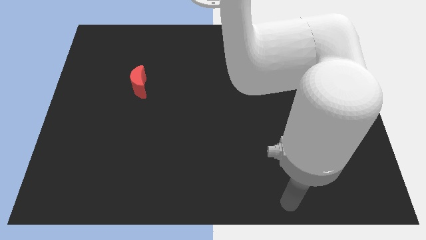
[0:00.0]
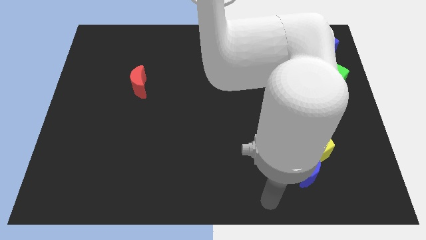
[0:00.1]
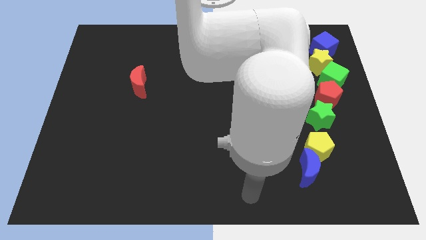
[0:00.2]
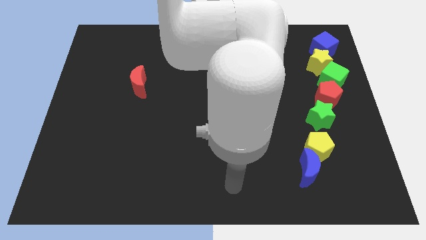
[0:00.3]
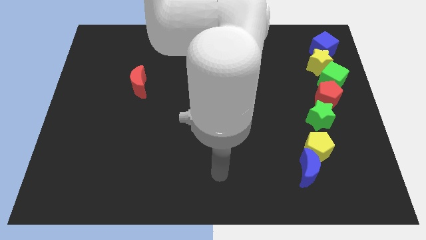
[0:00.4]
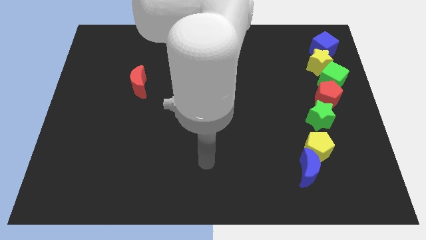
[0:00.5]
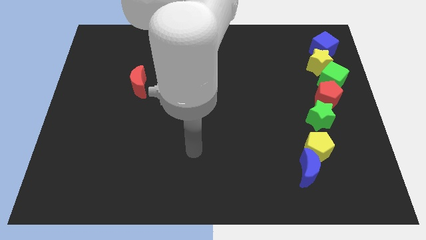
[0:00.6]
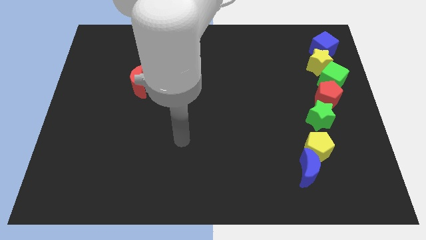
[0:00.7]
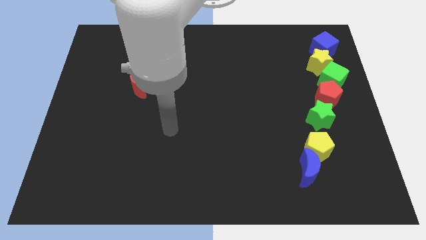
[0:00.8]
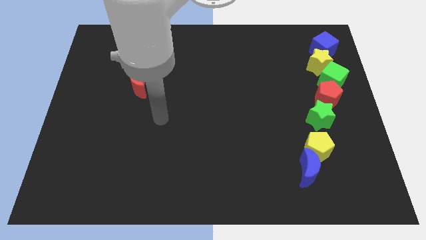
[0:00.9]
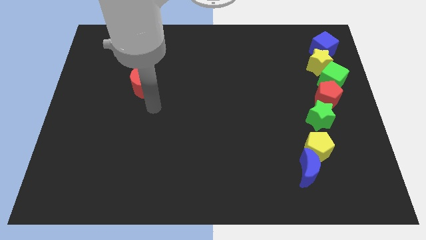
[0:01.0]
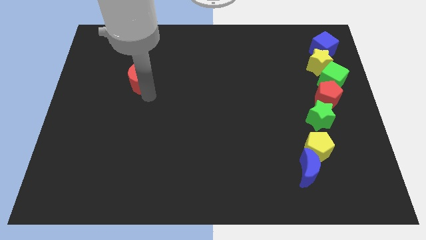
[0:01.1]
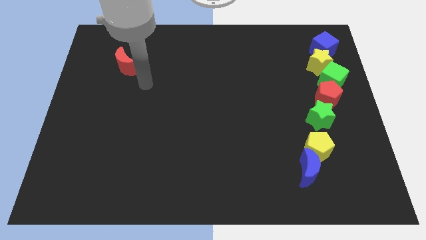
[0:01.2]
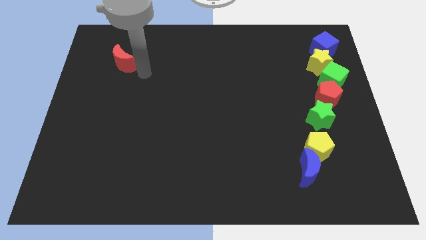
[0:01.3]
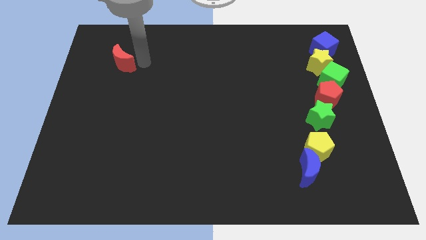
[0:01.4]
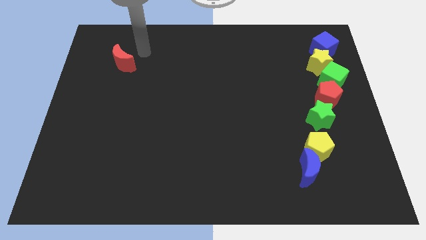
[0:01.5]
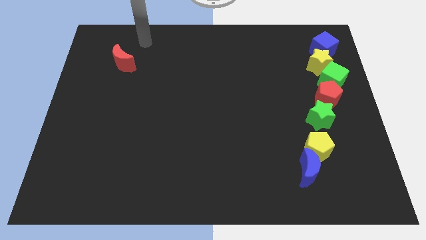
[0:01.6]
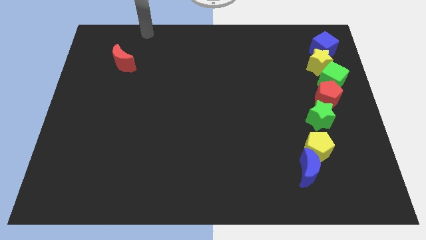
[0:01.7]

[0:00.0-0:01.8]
move away from the blue moon

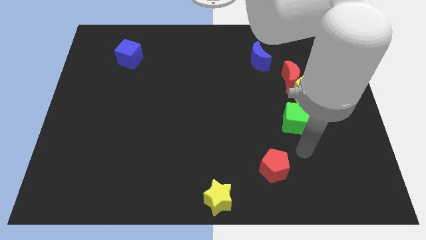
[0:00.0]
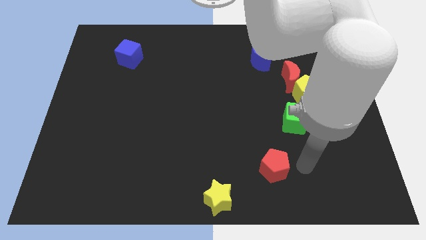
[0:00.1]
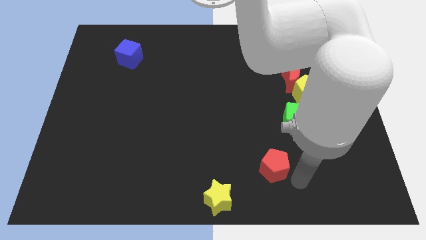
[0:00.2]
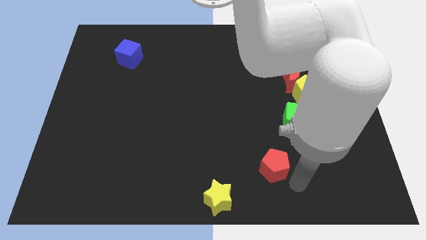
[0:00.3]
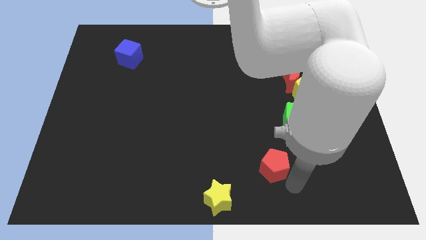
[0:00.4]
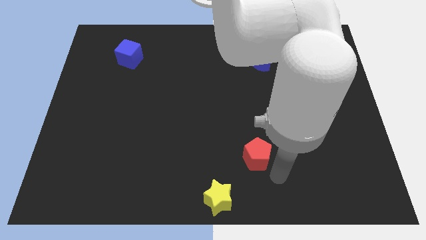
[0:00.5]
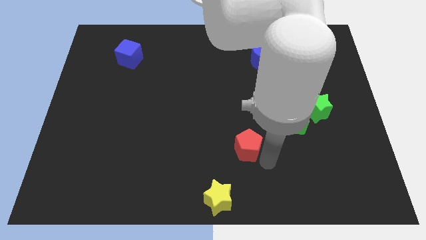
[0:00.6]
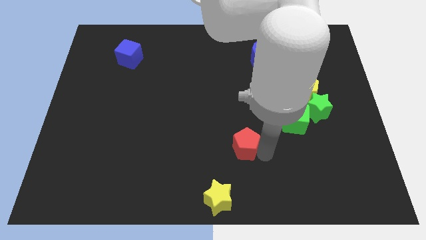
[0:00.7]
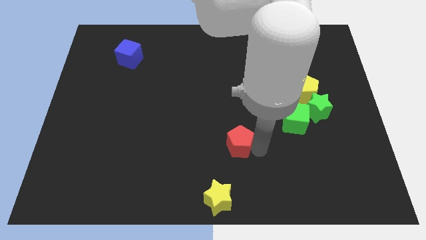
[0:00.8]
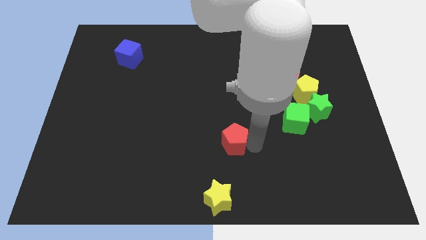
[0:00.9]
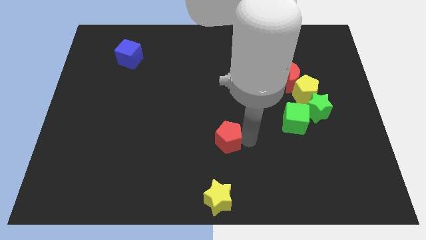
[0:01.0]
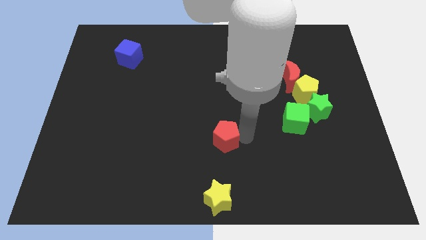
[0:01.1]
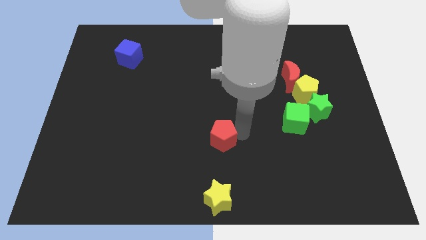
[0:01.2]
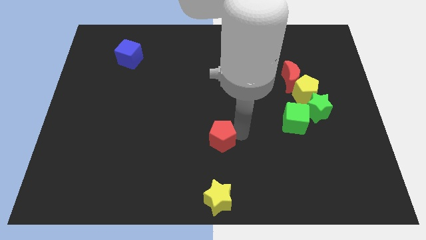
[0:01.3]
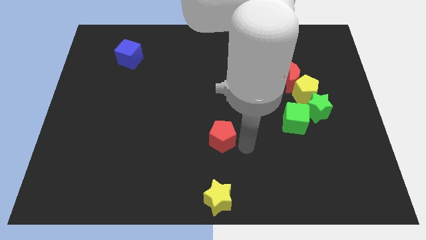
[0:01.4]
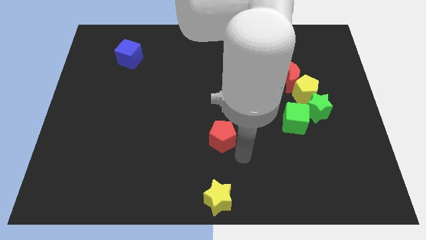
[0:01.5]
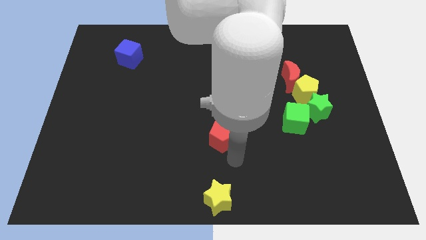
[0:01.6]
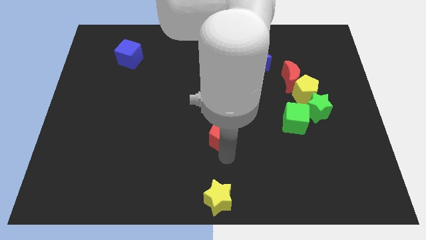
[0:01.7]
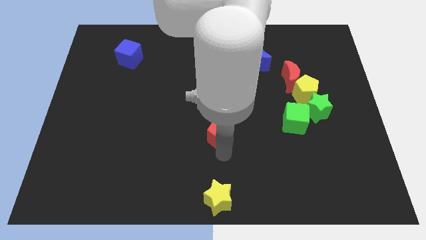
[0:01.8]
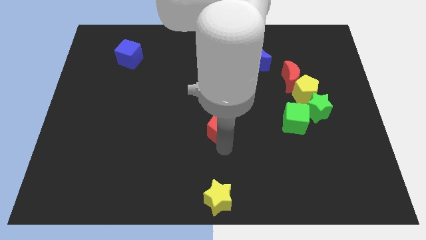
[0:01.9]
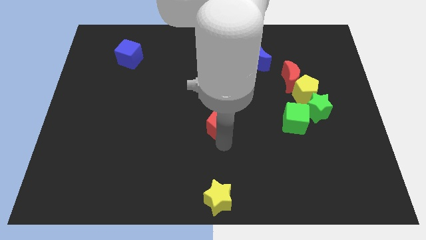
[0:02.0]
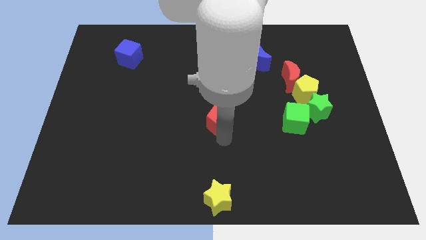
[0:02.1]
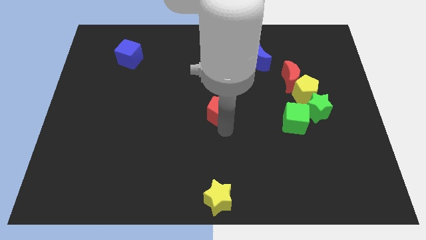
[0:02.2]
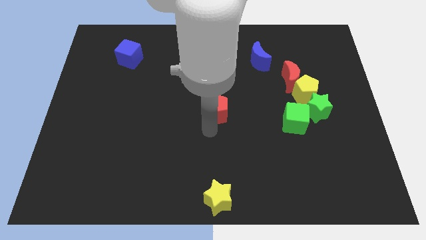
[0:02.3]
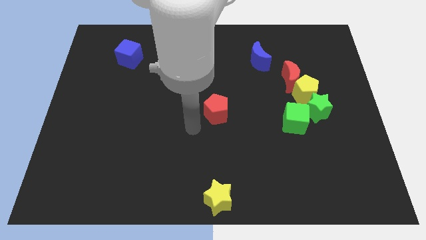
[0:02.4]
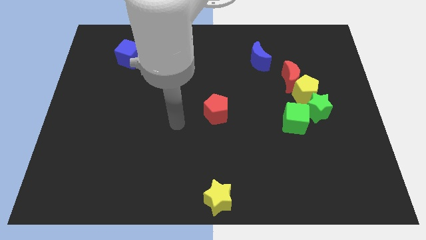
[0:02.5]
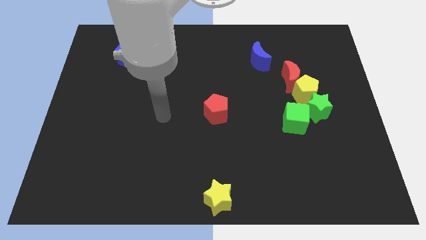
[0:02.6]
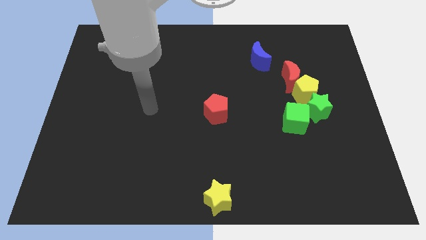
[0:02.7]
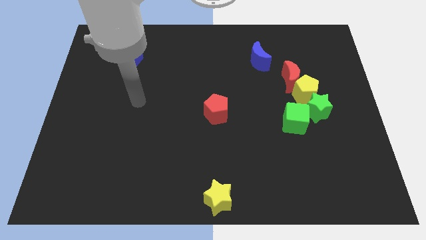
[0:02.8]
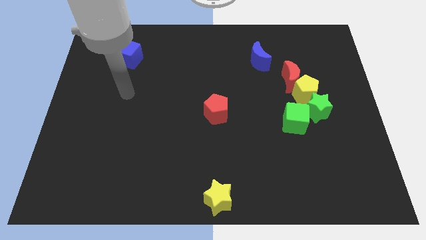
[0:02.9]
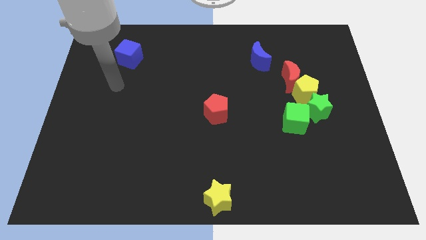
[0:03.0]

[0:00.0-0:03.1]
push the red pentagon to the center of the board

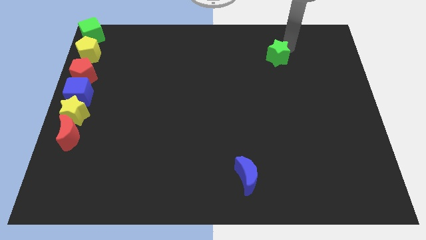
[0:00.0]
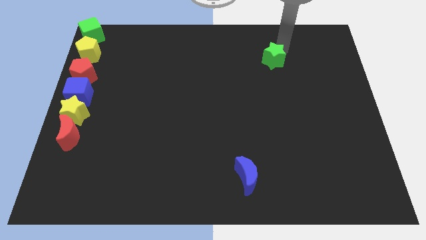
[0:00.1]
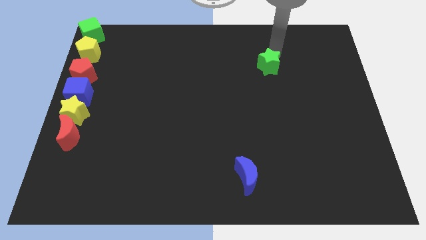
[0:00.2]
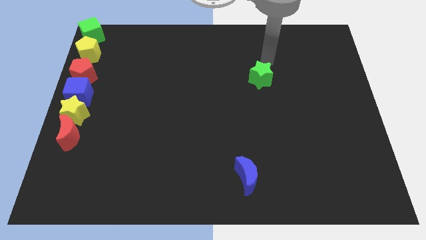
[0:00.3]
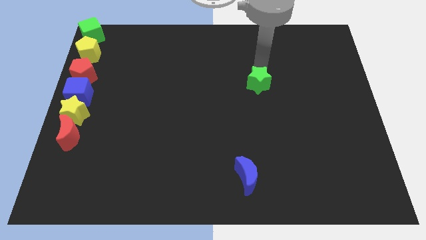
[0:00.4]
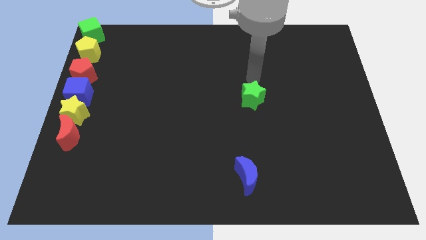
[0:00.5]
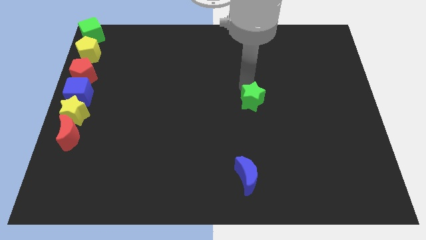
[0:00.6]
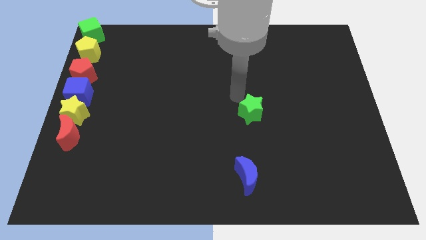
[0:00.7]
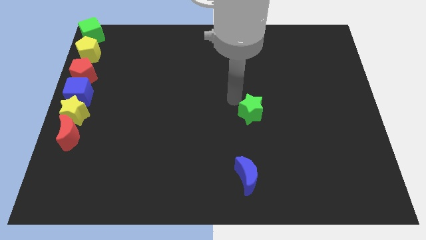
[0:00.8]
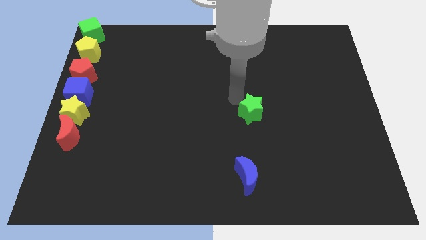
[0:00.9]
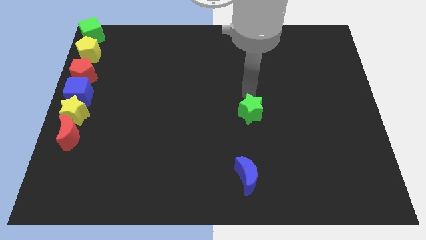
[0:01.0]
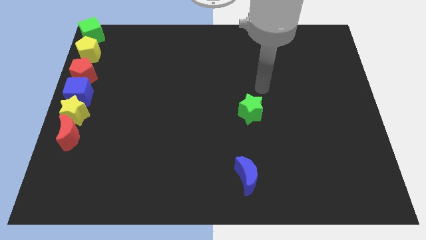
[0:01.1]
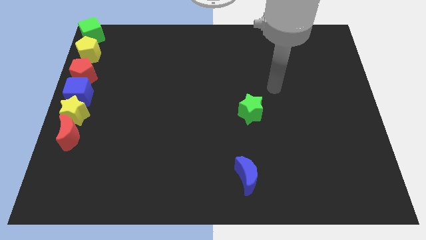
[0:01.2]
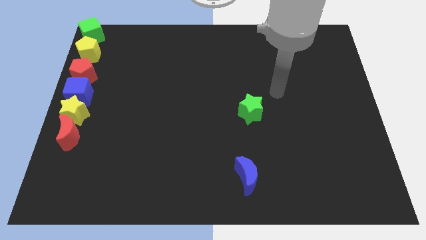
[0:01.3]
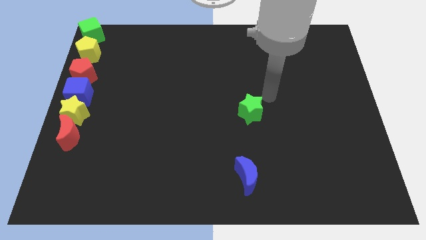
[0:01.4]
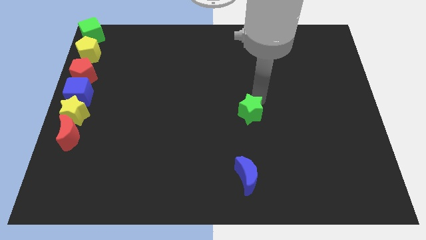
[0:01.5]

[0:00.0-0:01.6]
move the green star above the blue moon

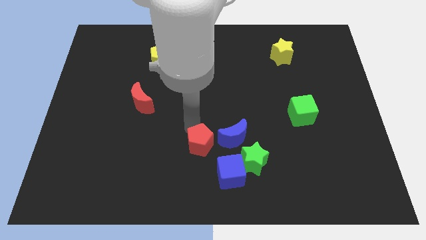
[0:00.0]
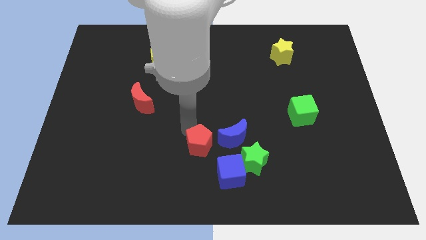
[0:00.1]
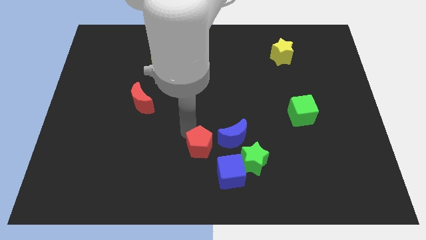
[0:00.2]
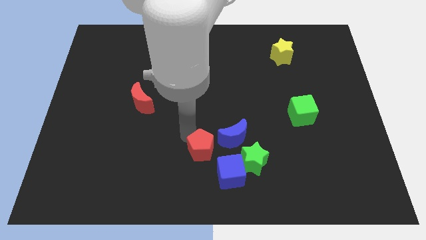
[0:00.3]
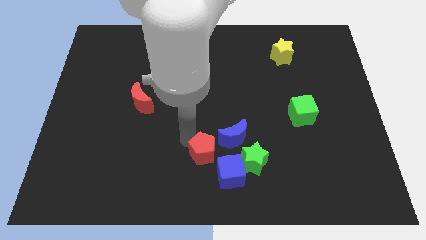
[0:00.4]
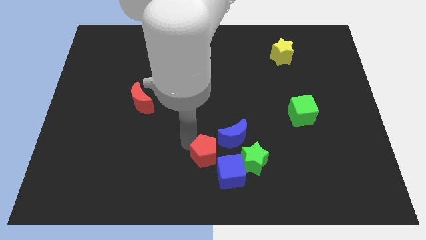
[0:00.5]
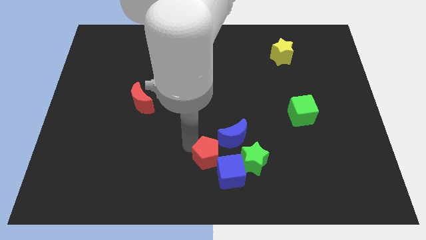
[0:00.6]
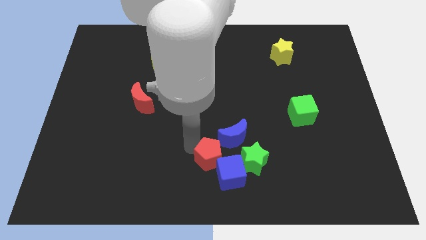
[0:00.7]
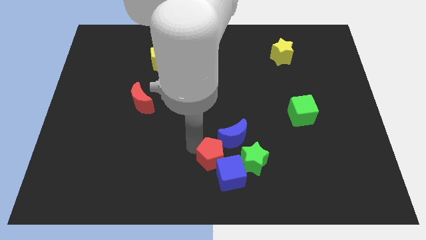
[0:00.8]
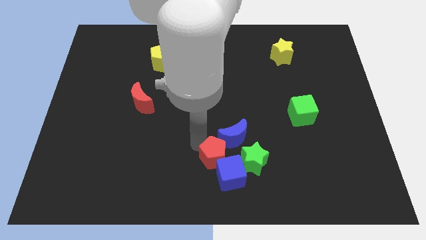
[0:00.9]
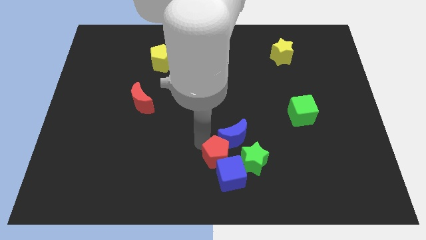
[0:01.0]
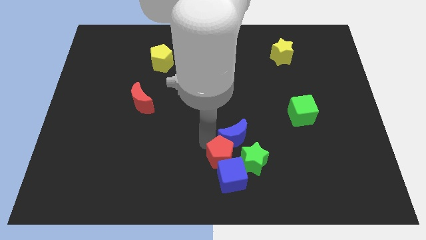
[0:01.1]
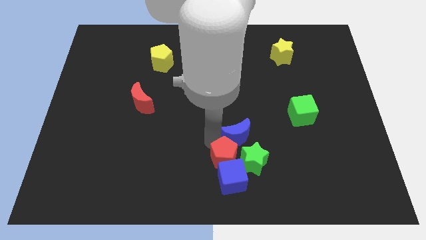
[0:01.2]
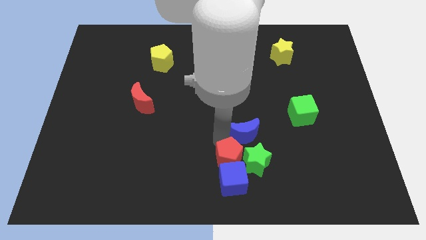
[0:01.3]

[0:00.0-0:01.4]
move the red pentagon to the top of the blue cube

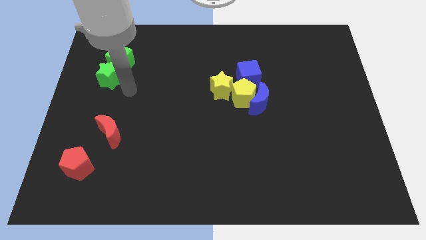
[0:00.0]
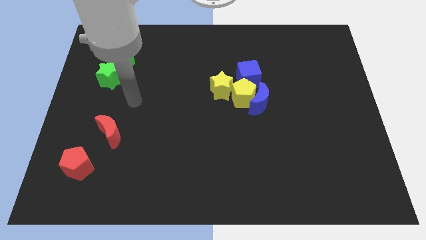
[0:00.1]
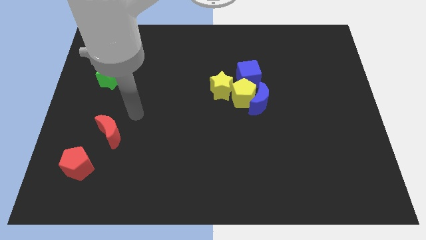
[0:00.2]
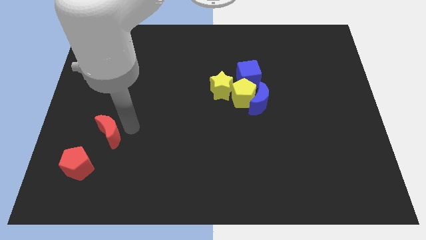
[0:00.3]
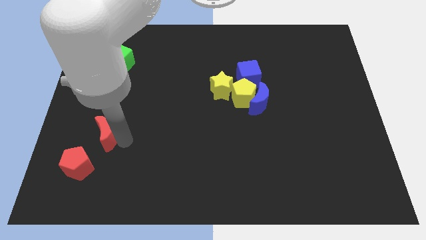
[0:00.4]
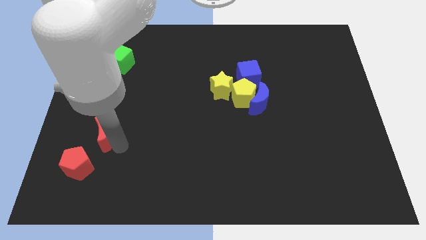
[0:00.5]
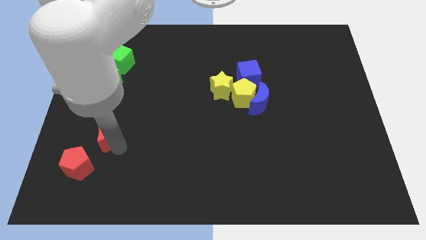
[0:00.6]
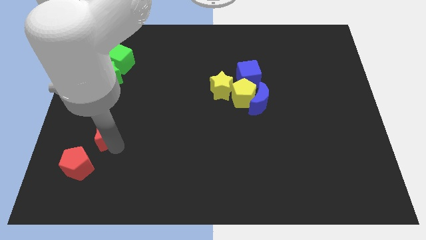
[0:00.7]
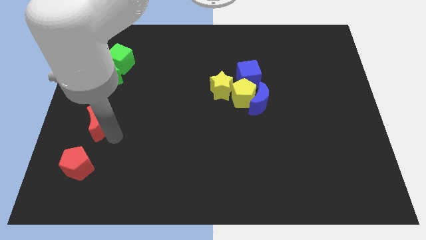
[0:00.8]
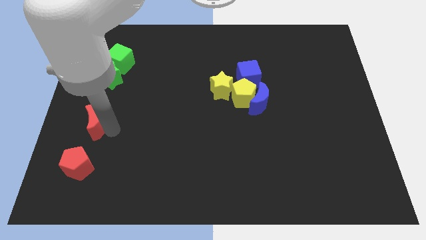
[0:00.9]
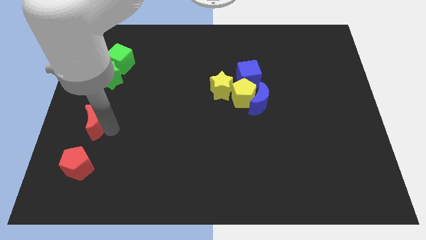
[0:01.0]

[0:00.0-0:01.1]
move your arm away from the green star

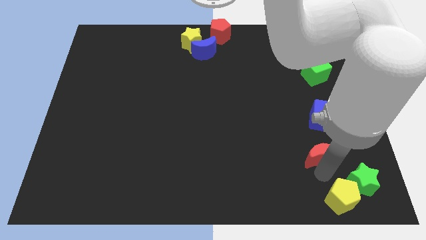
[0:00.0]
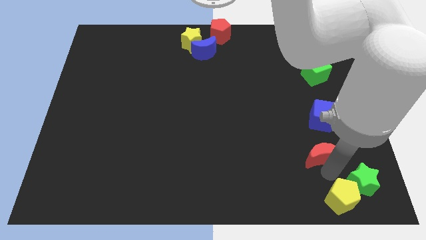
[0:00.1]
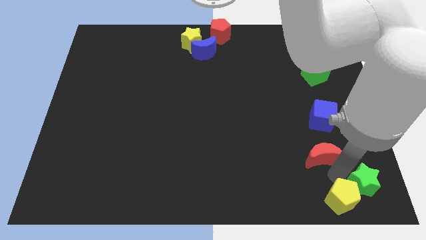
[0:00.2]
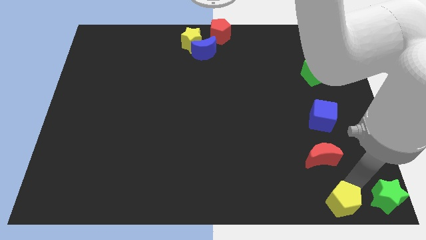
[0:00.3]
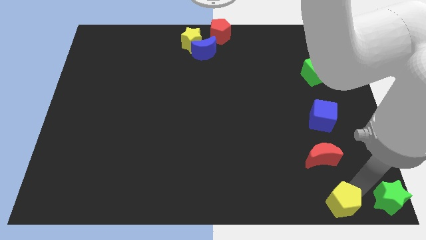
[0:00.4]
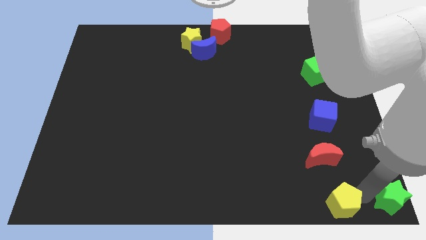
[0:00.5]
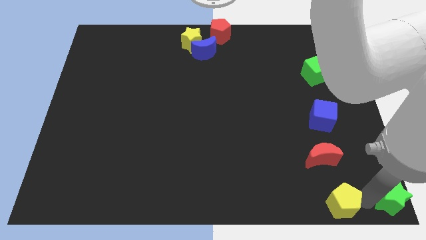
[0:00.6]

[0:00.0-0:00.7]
separate the yellow pentagon and green star
